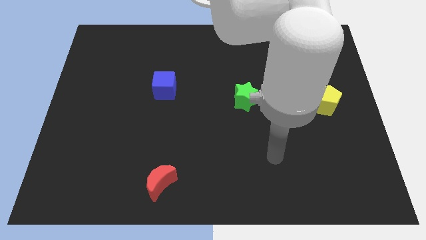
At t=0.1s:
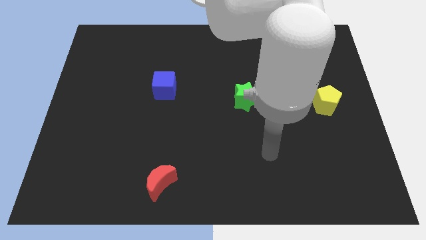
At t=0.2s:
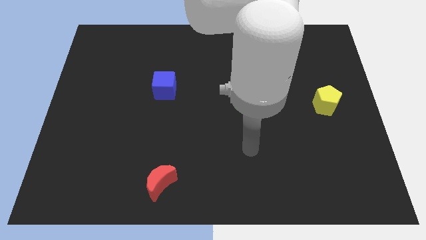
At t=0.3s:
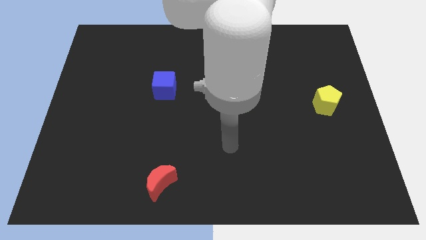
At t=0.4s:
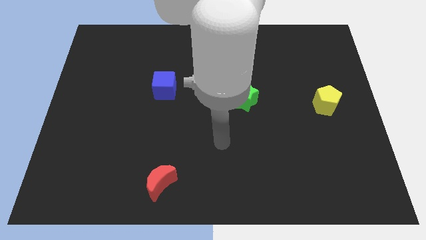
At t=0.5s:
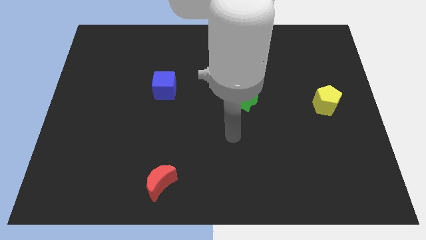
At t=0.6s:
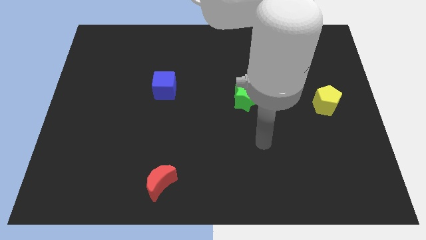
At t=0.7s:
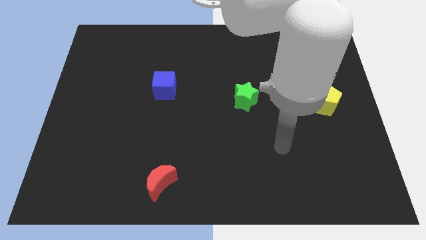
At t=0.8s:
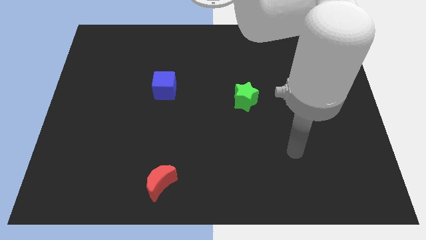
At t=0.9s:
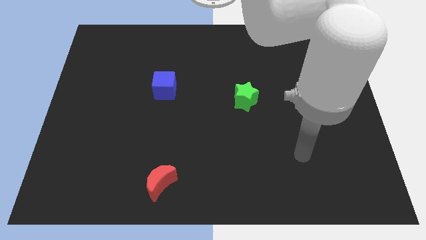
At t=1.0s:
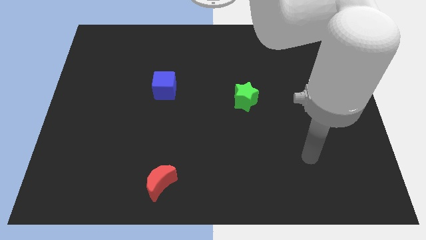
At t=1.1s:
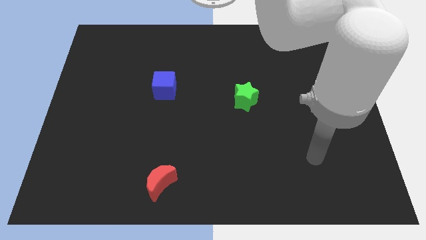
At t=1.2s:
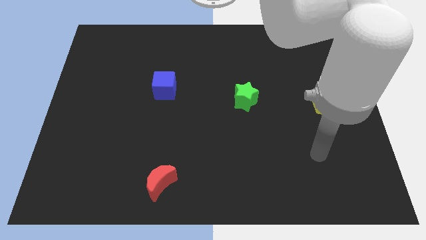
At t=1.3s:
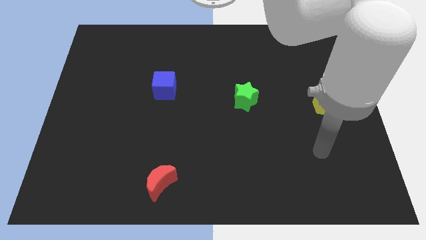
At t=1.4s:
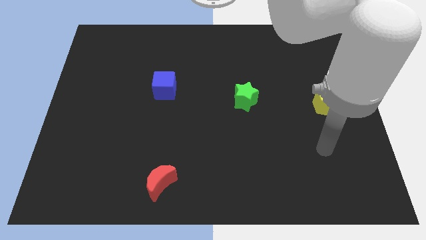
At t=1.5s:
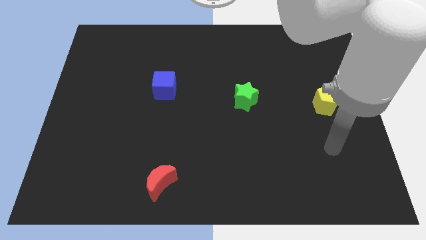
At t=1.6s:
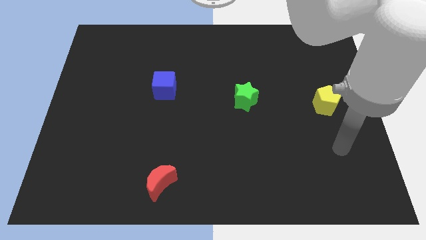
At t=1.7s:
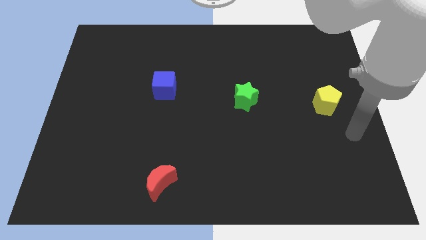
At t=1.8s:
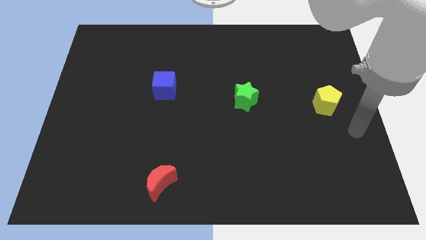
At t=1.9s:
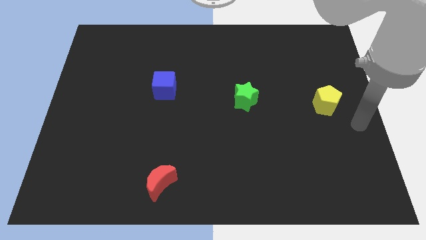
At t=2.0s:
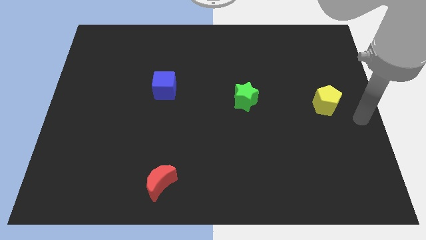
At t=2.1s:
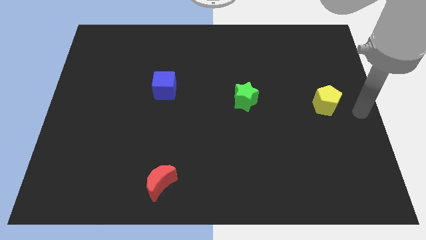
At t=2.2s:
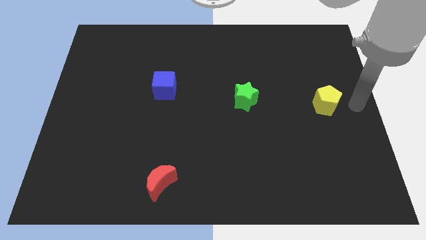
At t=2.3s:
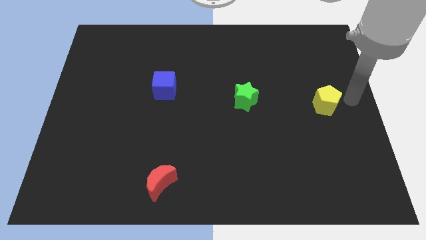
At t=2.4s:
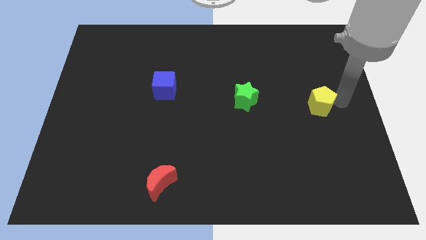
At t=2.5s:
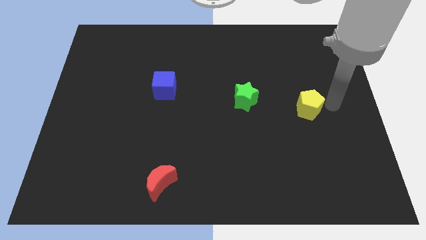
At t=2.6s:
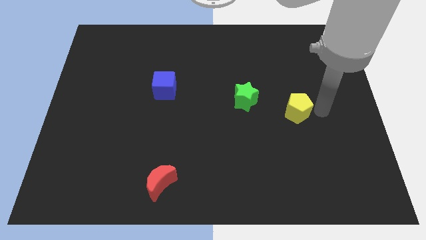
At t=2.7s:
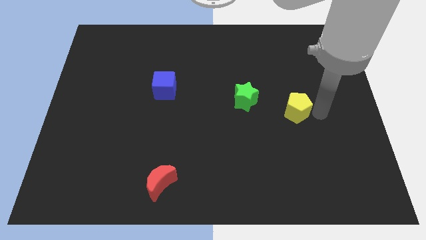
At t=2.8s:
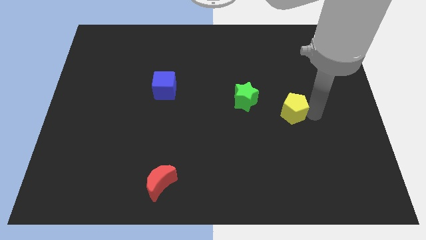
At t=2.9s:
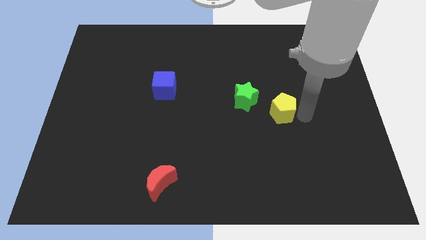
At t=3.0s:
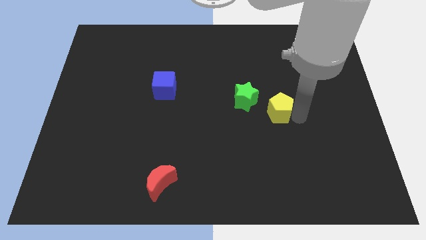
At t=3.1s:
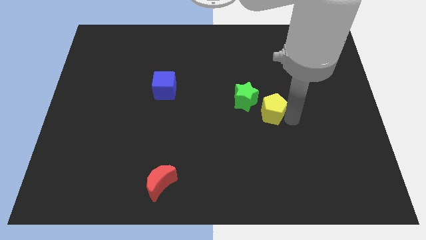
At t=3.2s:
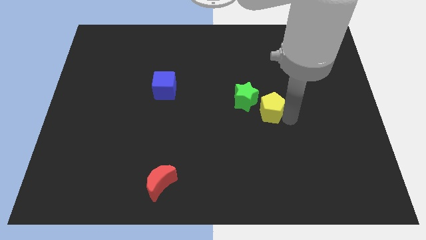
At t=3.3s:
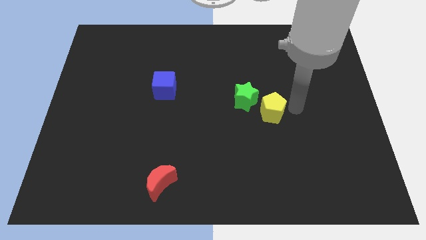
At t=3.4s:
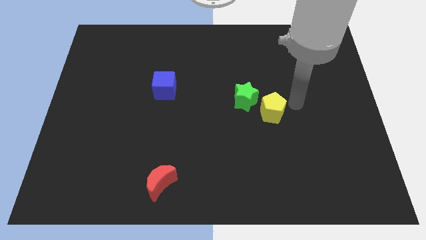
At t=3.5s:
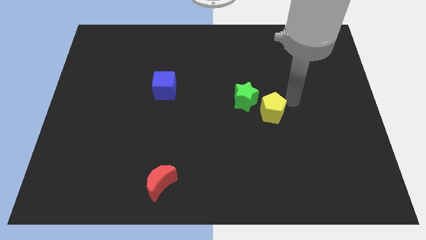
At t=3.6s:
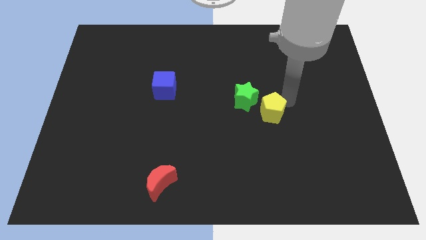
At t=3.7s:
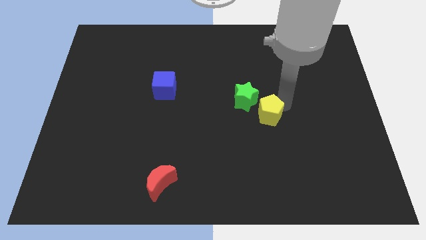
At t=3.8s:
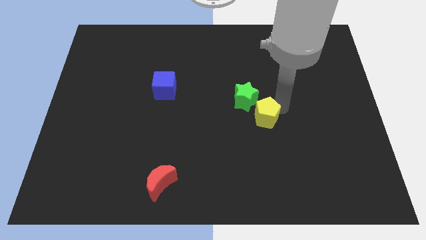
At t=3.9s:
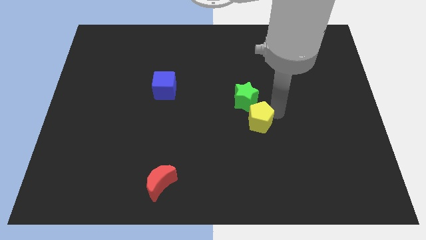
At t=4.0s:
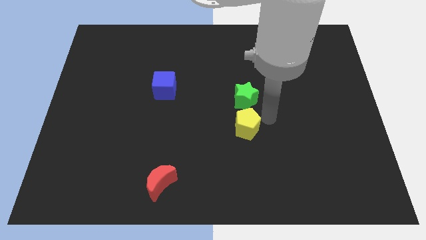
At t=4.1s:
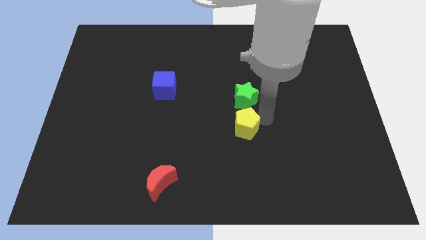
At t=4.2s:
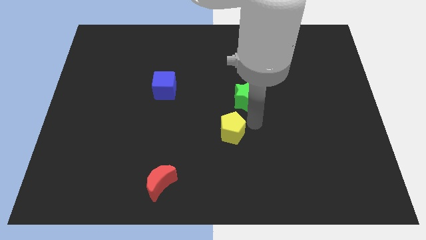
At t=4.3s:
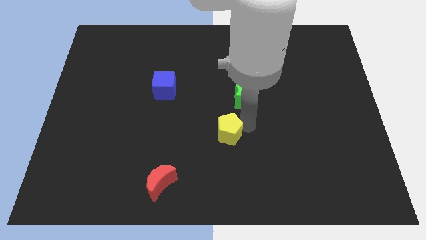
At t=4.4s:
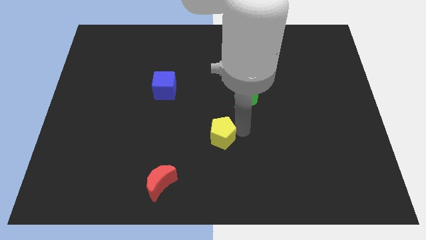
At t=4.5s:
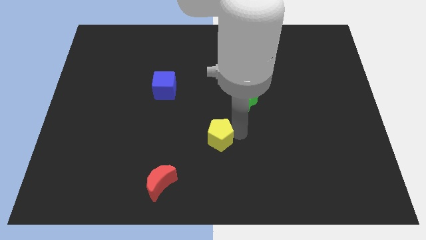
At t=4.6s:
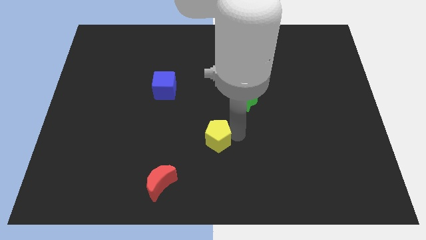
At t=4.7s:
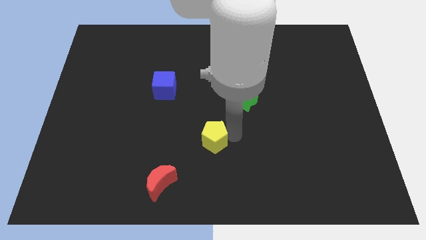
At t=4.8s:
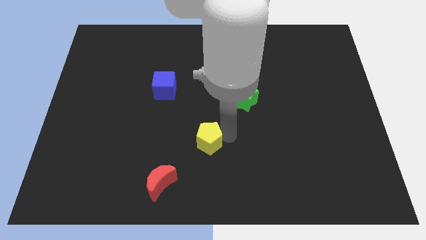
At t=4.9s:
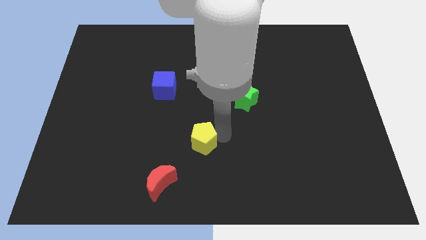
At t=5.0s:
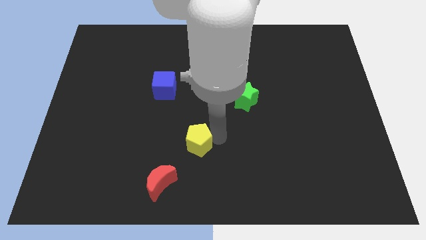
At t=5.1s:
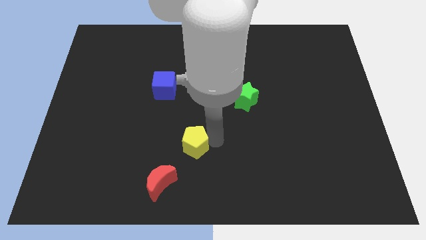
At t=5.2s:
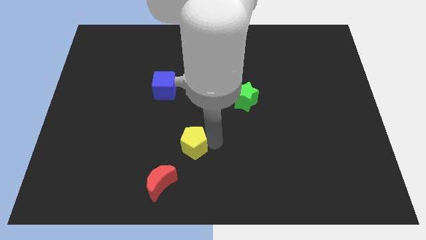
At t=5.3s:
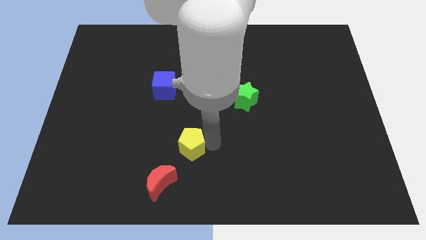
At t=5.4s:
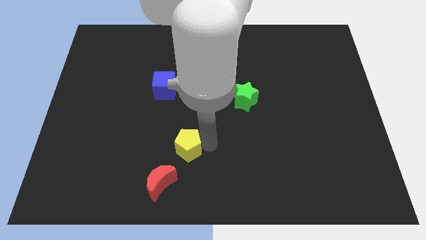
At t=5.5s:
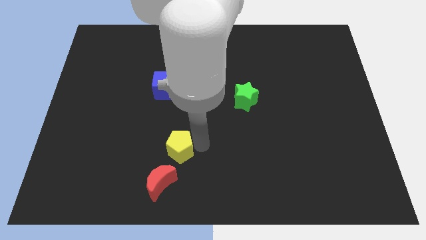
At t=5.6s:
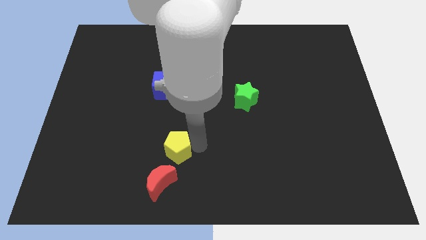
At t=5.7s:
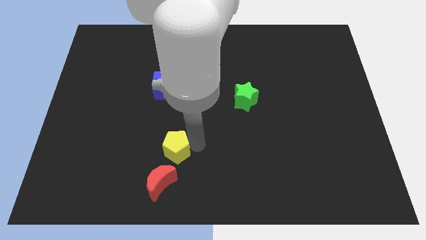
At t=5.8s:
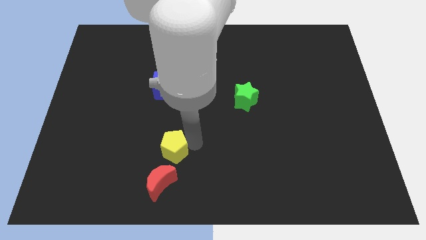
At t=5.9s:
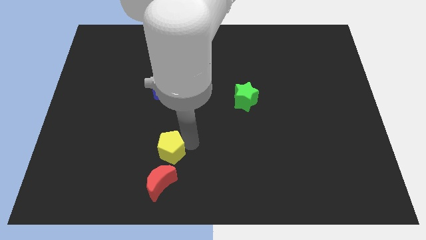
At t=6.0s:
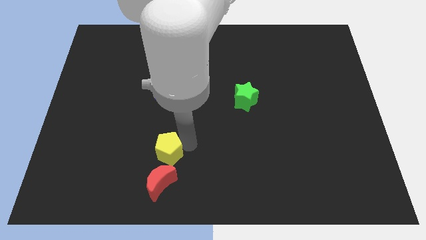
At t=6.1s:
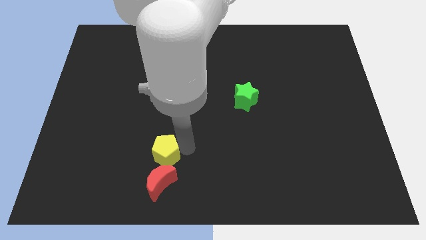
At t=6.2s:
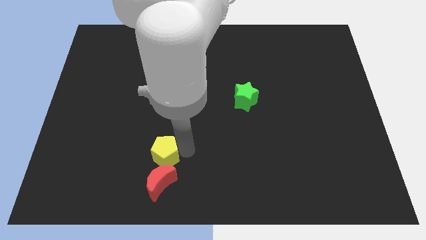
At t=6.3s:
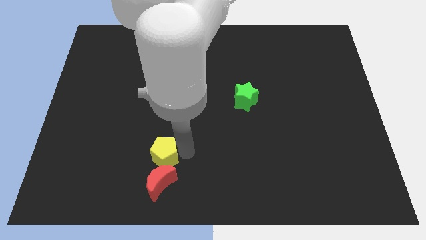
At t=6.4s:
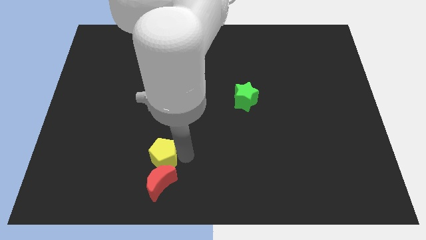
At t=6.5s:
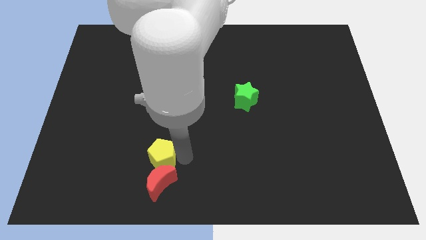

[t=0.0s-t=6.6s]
slide the yellow pentagon close to the red moon

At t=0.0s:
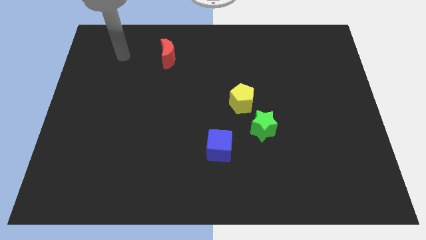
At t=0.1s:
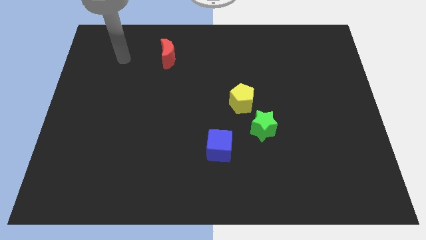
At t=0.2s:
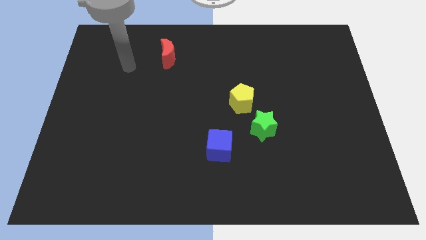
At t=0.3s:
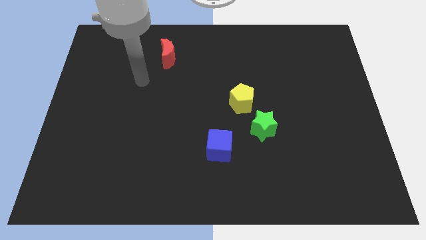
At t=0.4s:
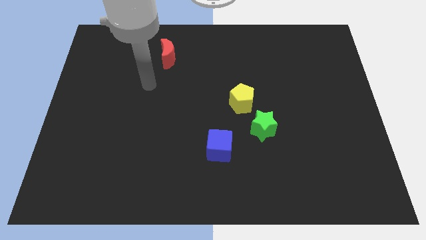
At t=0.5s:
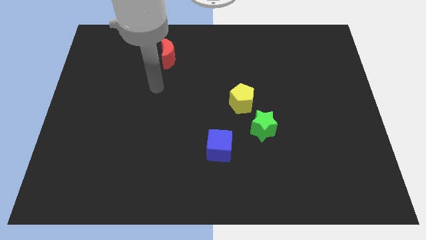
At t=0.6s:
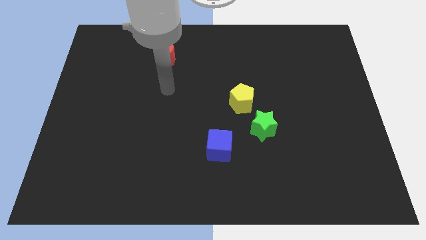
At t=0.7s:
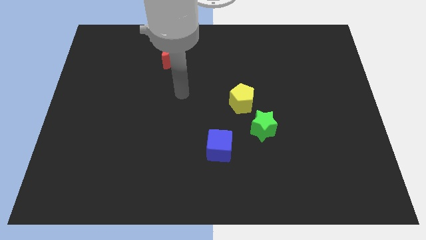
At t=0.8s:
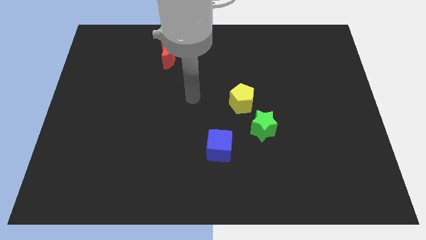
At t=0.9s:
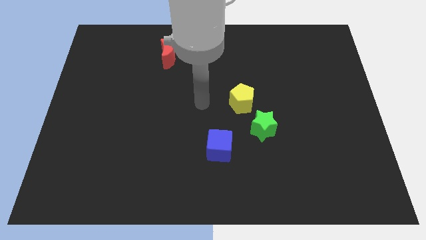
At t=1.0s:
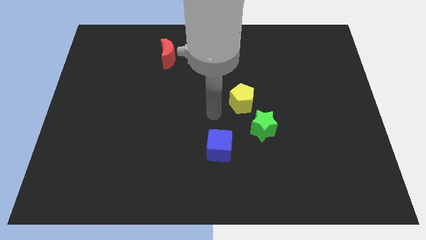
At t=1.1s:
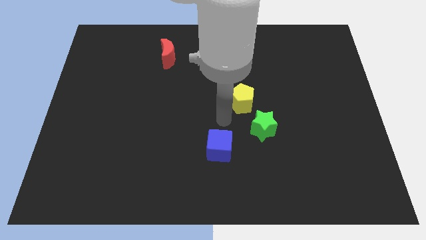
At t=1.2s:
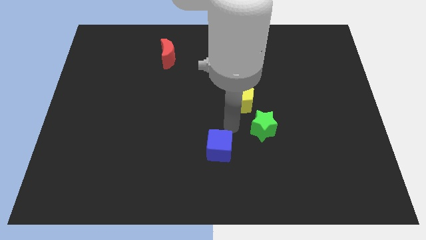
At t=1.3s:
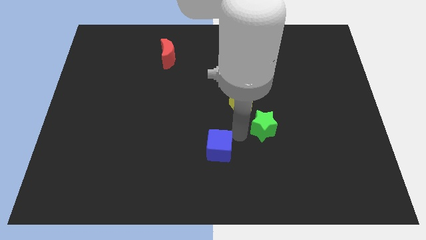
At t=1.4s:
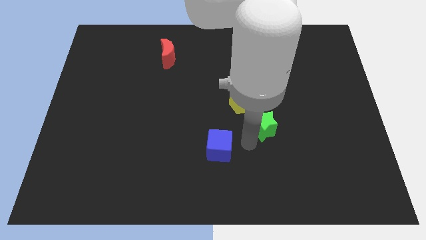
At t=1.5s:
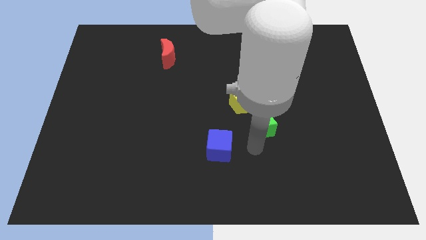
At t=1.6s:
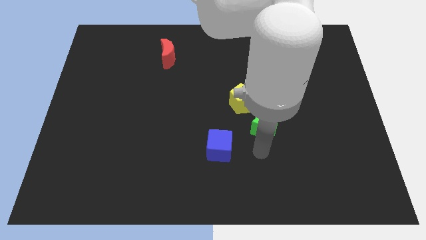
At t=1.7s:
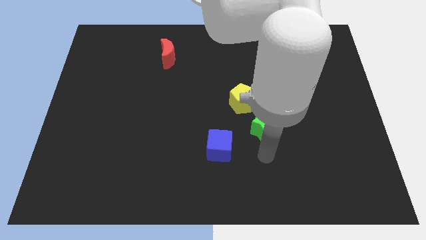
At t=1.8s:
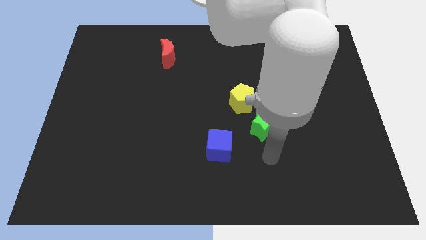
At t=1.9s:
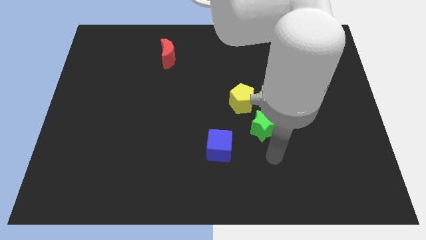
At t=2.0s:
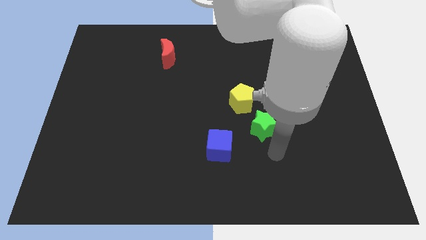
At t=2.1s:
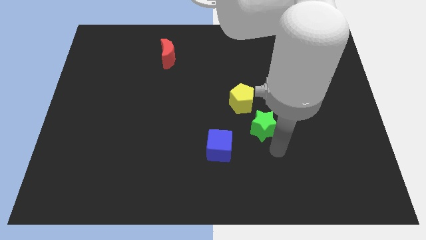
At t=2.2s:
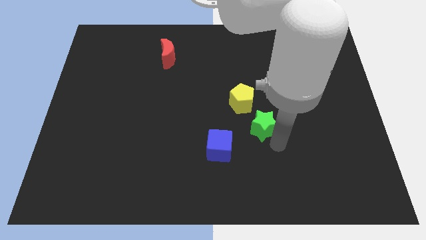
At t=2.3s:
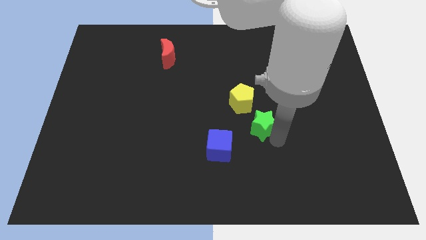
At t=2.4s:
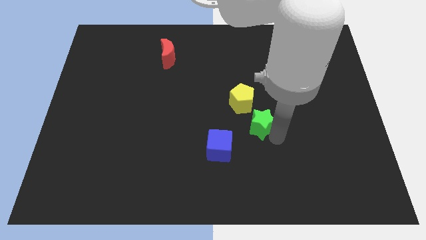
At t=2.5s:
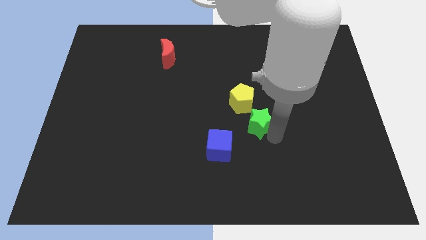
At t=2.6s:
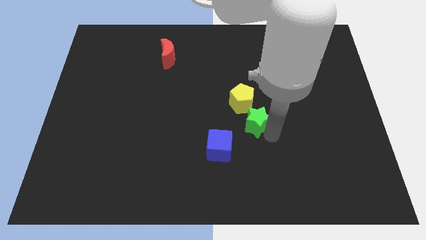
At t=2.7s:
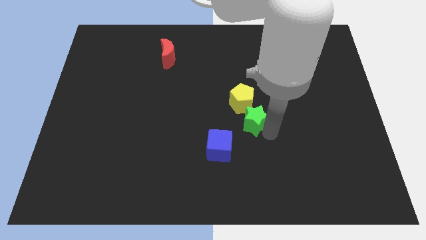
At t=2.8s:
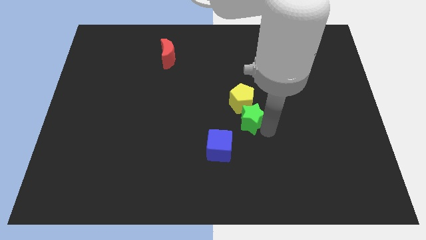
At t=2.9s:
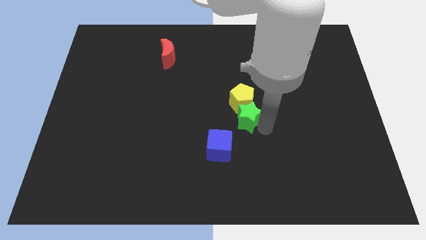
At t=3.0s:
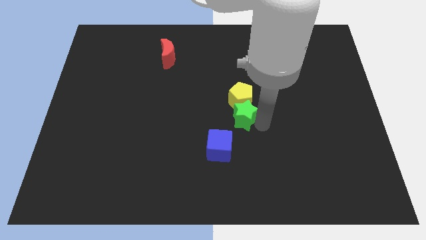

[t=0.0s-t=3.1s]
put the star towards the pentagon
